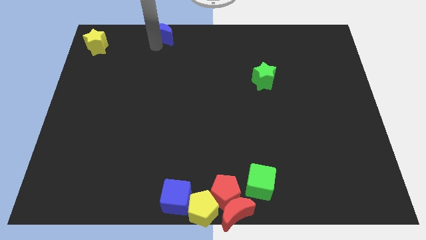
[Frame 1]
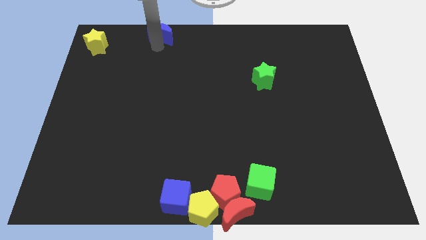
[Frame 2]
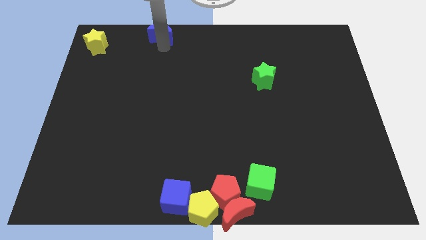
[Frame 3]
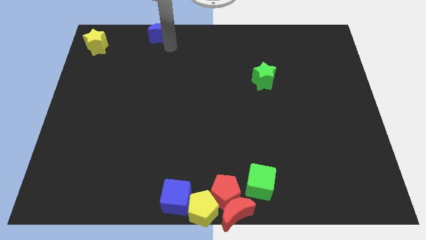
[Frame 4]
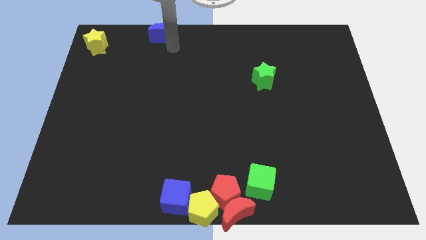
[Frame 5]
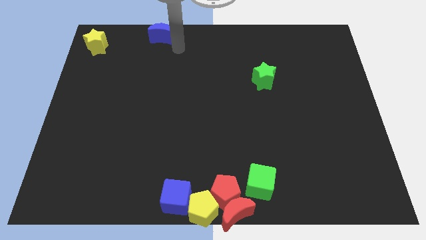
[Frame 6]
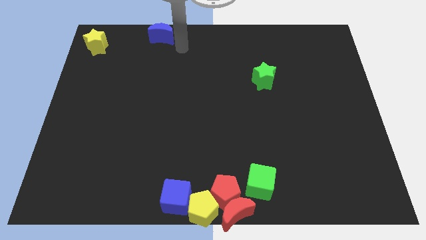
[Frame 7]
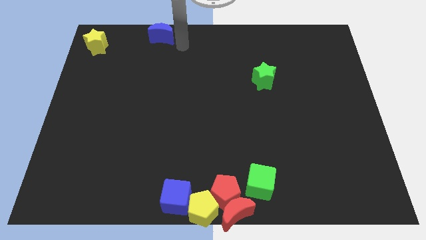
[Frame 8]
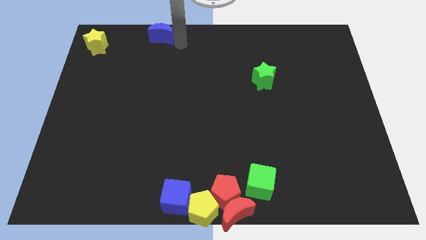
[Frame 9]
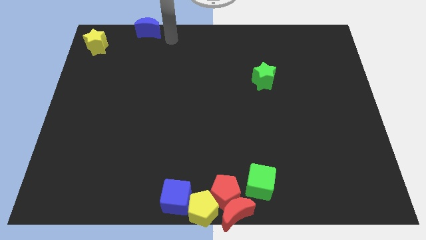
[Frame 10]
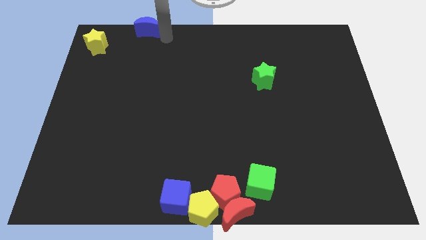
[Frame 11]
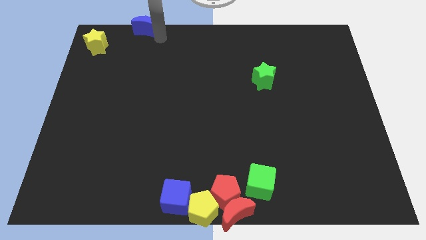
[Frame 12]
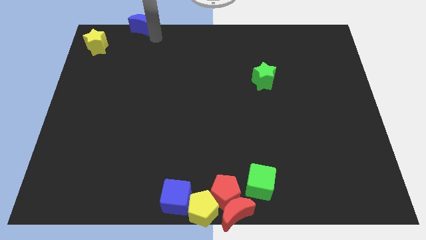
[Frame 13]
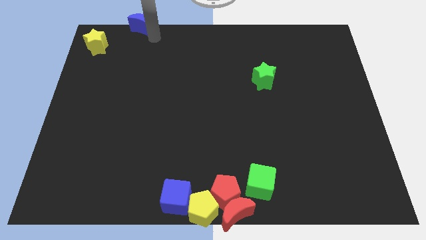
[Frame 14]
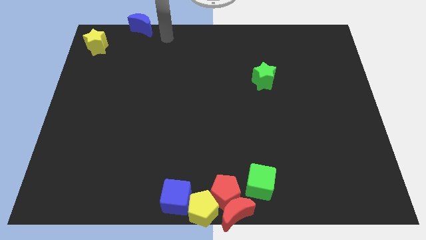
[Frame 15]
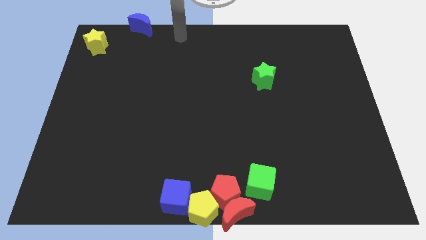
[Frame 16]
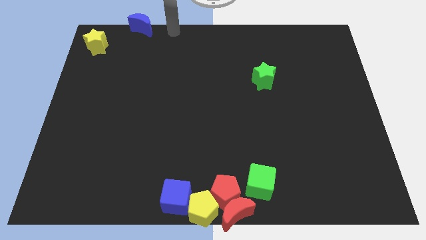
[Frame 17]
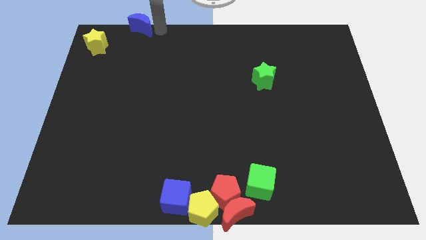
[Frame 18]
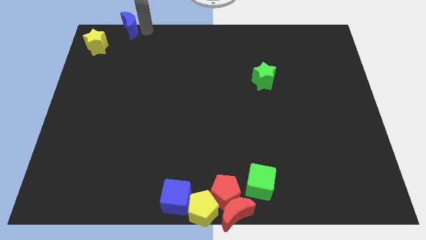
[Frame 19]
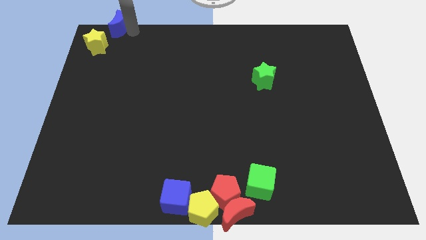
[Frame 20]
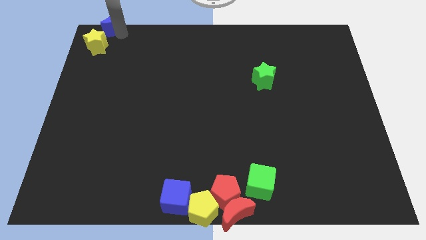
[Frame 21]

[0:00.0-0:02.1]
push blue moon to the top left

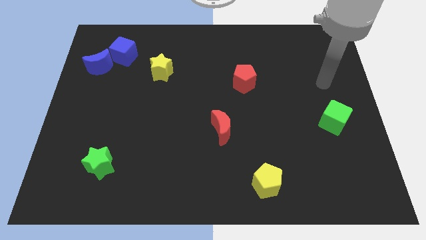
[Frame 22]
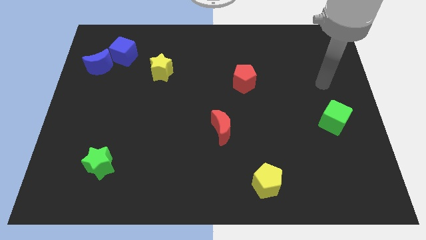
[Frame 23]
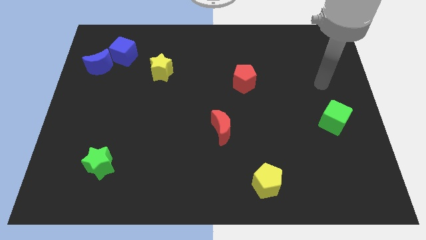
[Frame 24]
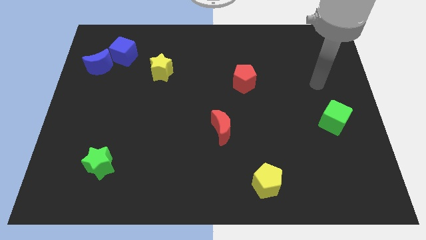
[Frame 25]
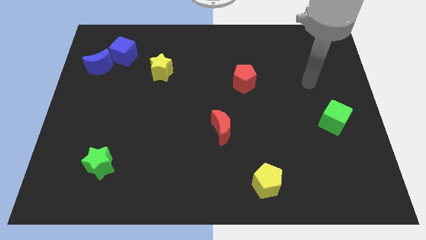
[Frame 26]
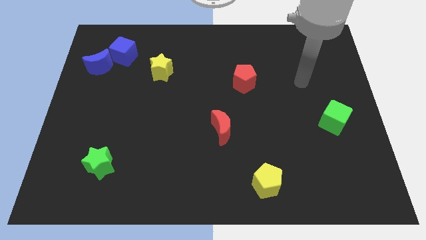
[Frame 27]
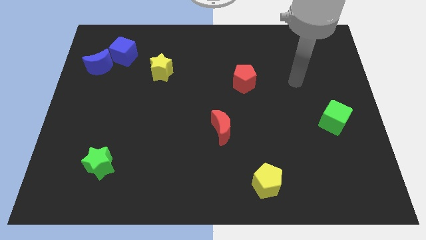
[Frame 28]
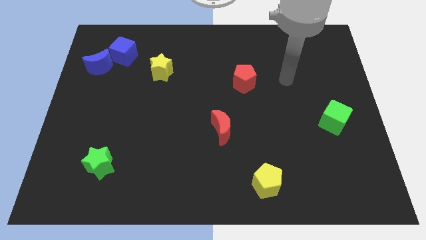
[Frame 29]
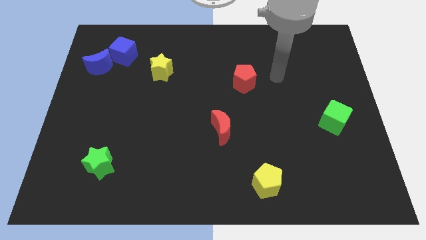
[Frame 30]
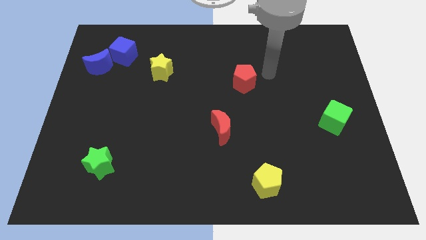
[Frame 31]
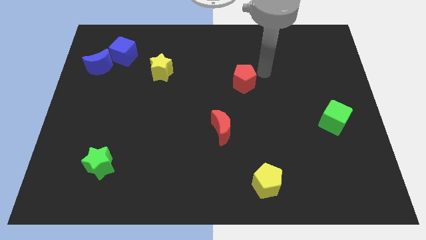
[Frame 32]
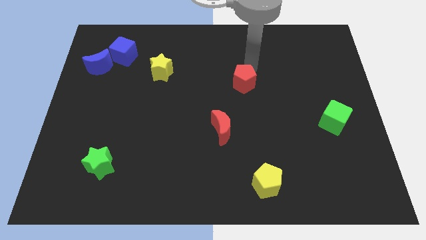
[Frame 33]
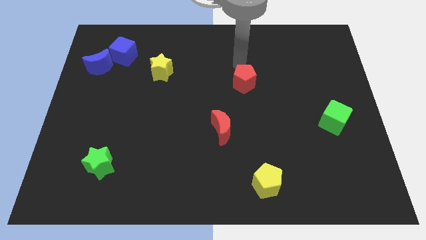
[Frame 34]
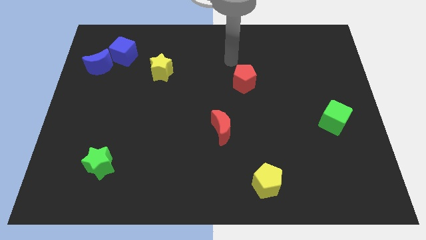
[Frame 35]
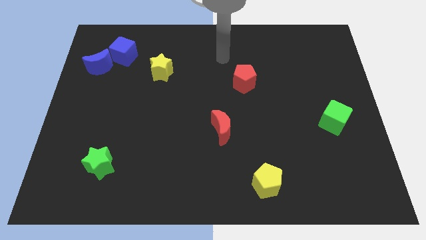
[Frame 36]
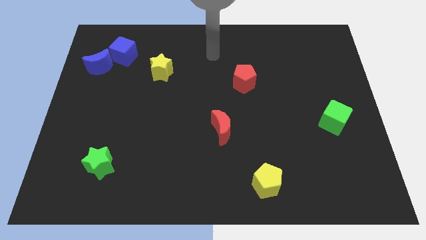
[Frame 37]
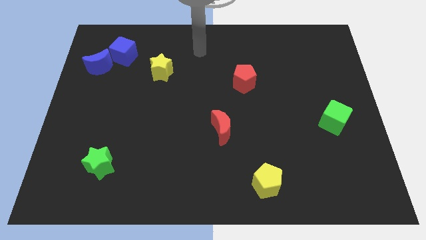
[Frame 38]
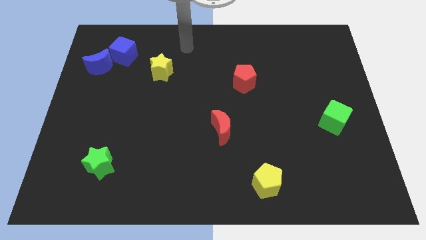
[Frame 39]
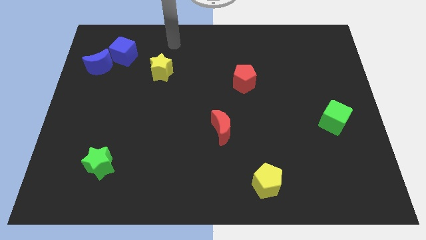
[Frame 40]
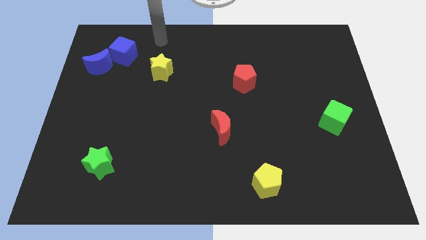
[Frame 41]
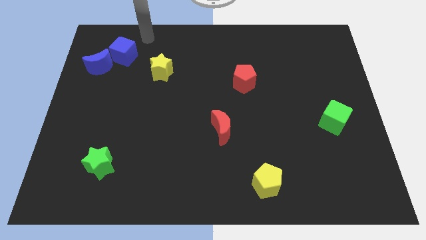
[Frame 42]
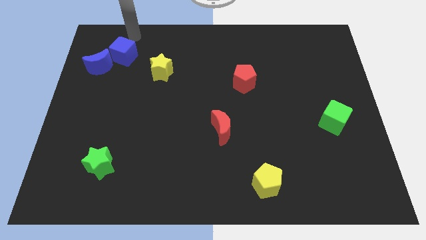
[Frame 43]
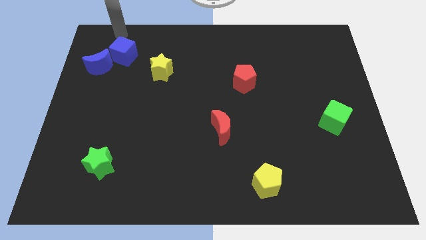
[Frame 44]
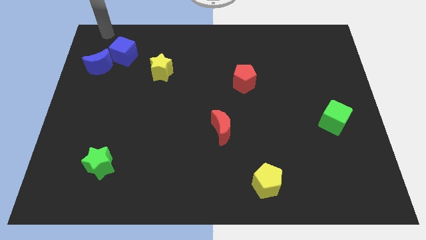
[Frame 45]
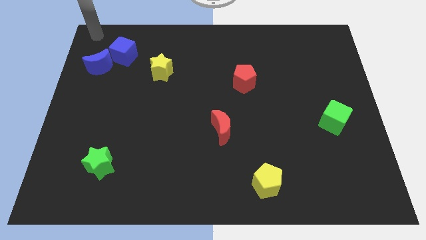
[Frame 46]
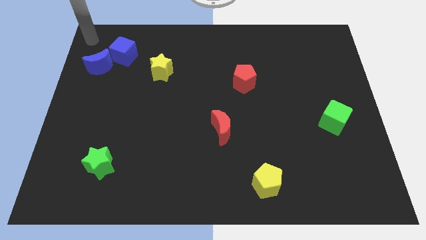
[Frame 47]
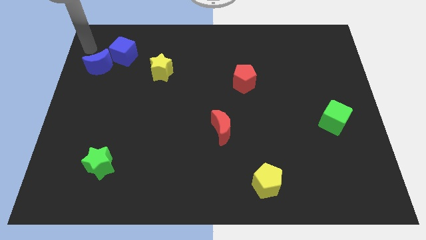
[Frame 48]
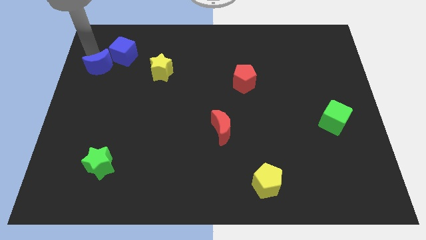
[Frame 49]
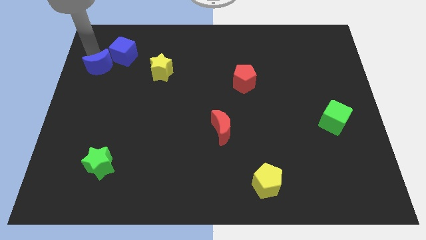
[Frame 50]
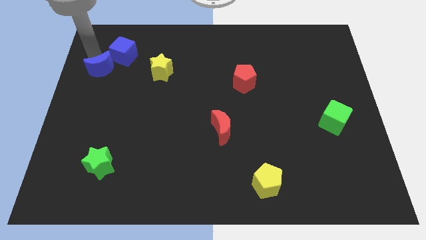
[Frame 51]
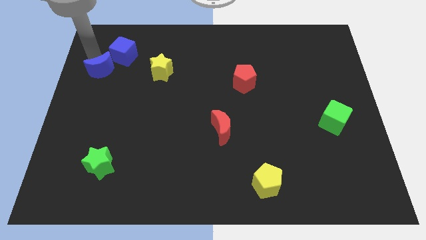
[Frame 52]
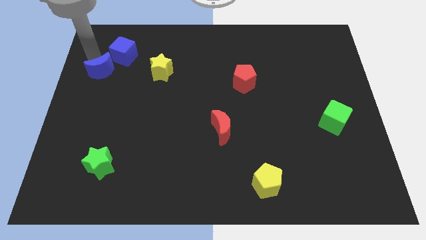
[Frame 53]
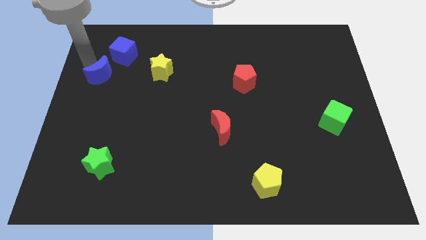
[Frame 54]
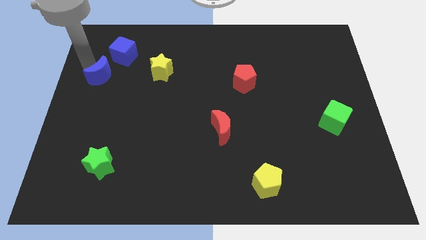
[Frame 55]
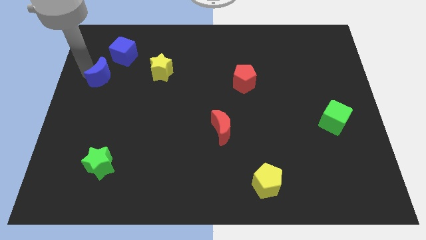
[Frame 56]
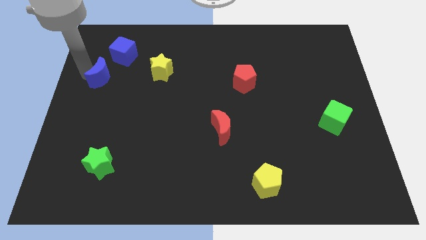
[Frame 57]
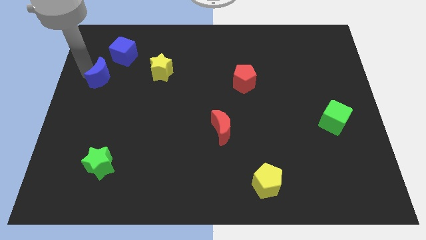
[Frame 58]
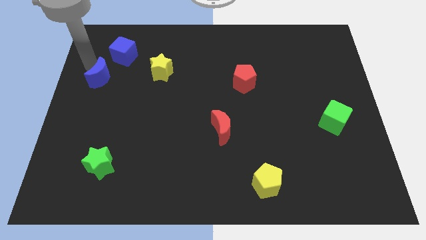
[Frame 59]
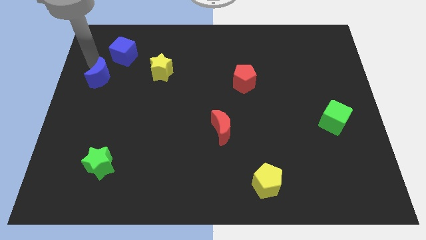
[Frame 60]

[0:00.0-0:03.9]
slightly push the blue crescent towards bottom of the board

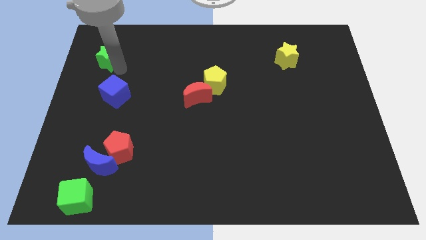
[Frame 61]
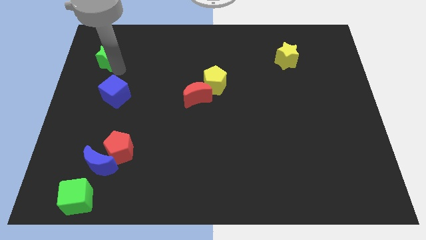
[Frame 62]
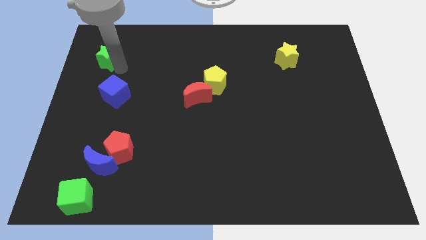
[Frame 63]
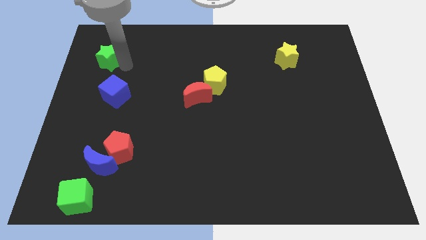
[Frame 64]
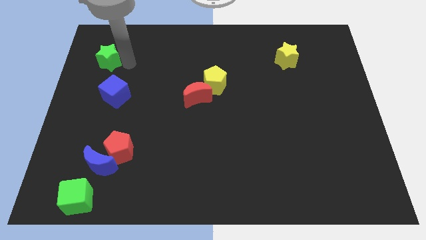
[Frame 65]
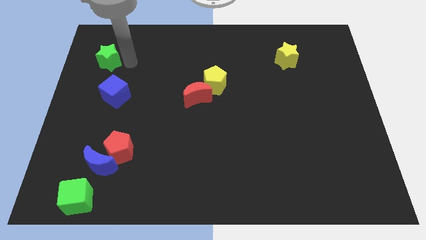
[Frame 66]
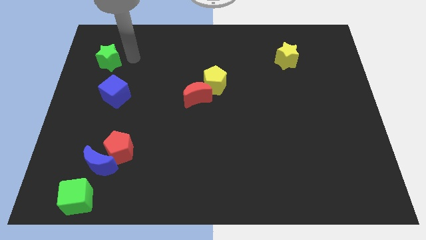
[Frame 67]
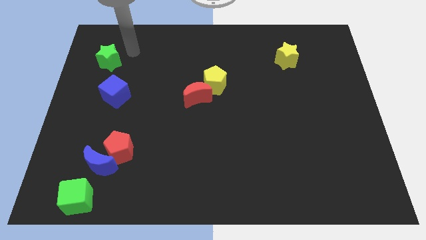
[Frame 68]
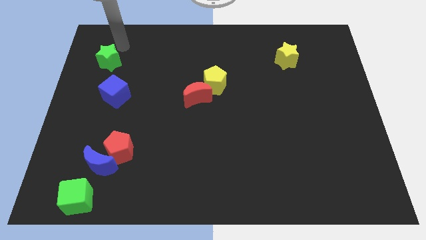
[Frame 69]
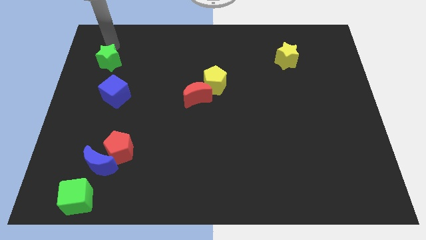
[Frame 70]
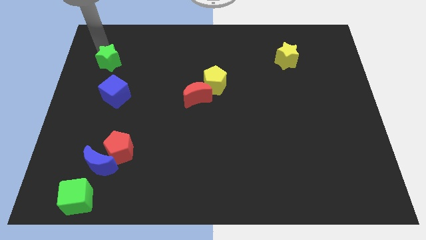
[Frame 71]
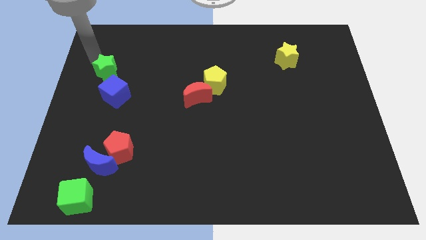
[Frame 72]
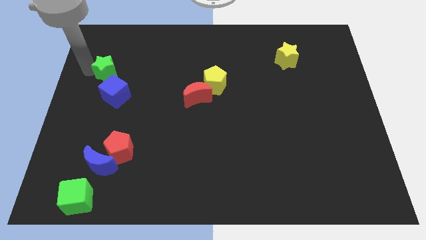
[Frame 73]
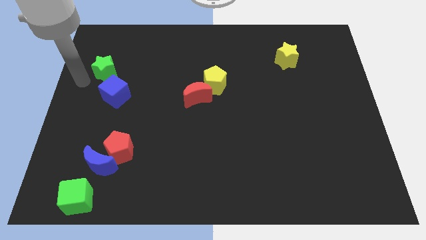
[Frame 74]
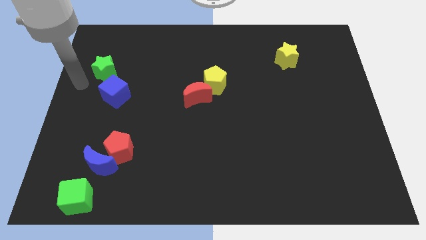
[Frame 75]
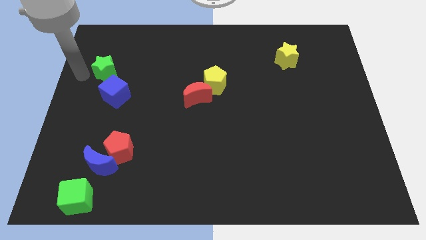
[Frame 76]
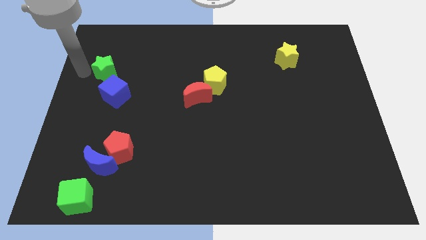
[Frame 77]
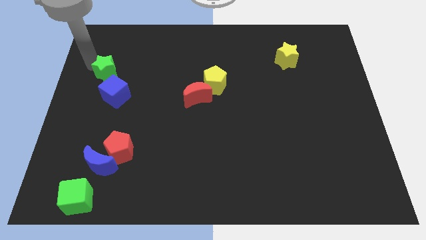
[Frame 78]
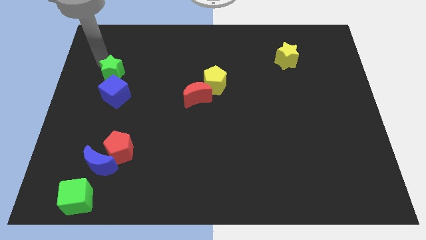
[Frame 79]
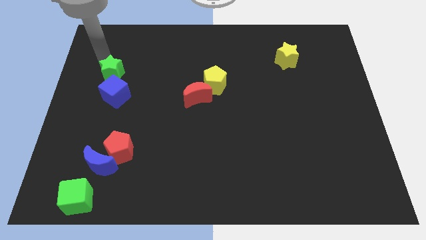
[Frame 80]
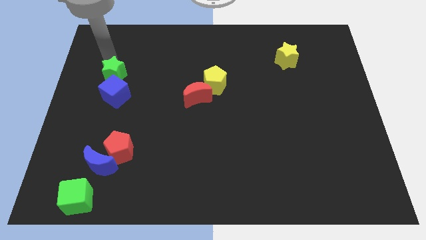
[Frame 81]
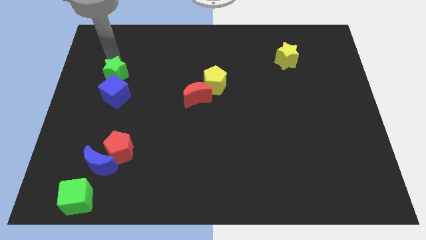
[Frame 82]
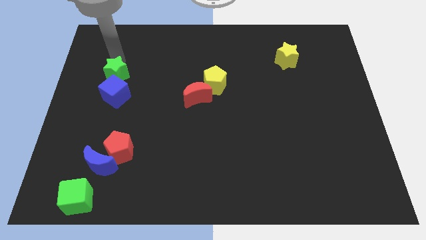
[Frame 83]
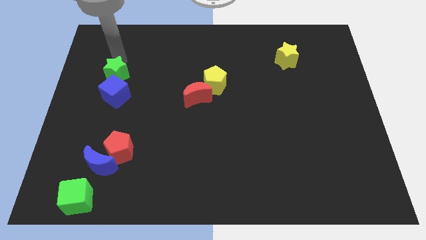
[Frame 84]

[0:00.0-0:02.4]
slightly move the green star near blue cube

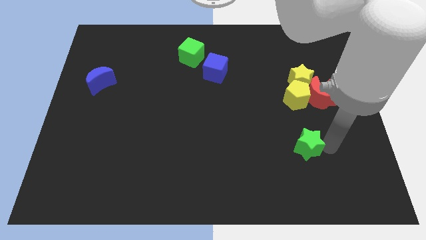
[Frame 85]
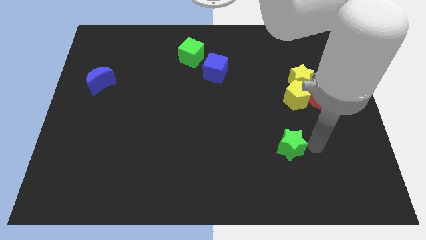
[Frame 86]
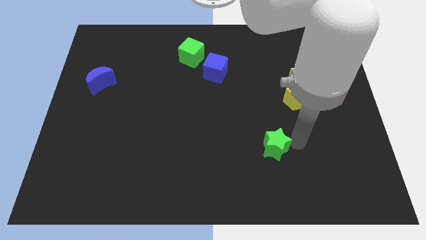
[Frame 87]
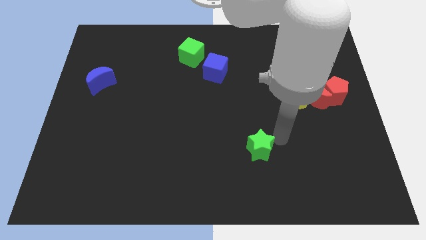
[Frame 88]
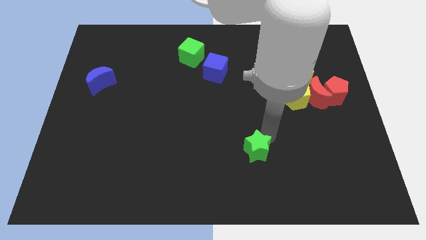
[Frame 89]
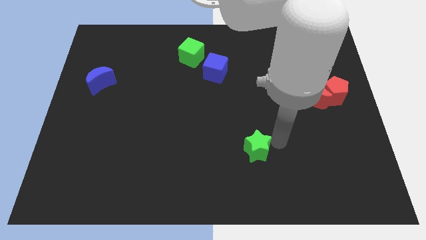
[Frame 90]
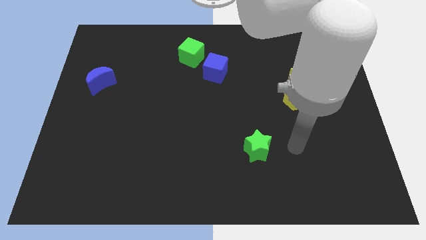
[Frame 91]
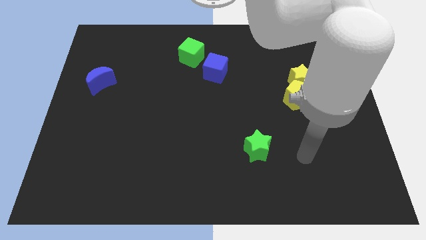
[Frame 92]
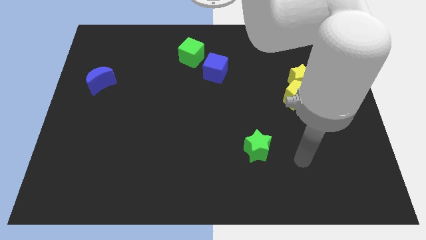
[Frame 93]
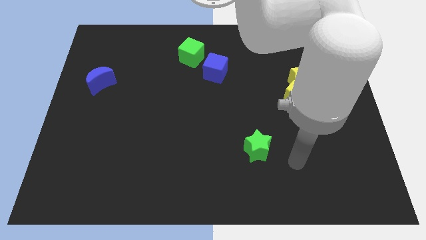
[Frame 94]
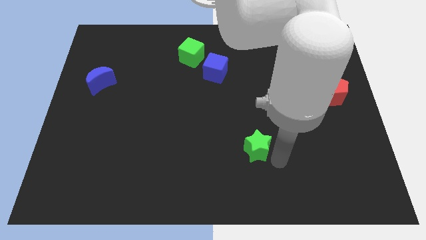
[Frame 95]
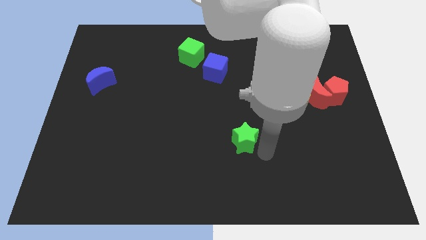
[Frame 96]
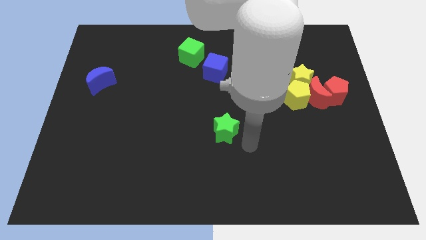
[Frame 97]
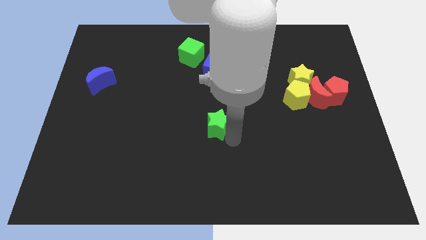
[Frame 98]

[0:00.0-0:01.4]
move the green star to the middle of the board
